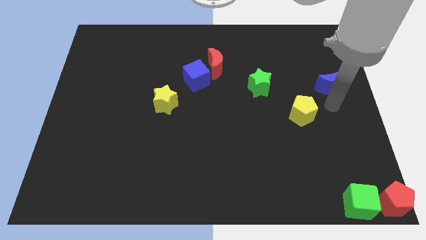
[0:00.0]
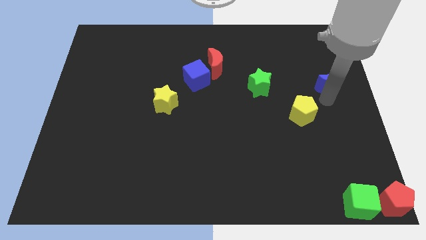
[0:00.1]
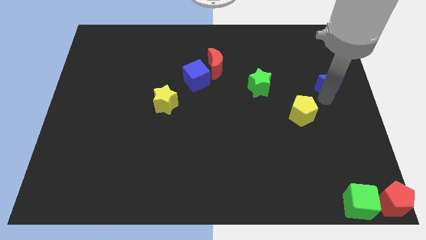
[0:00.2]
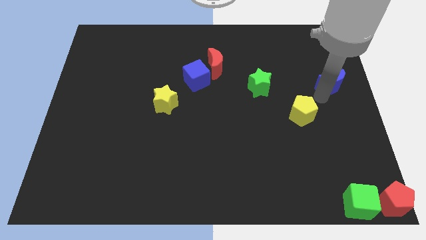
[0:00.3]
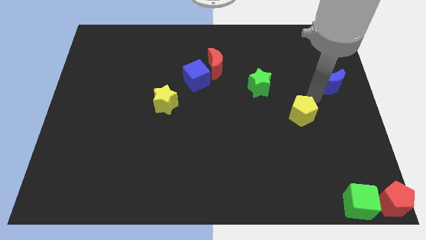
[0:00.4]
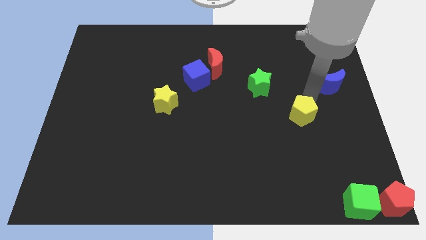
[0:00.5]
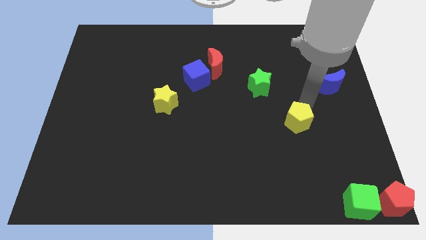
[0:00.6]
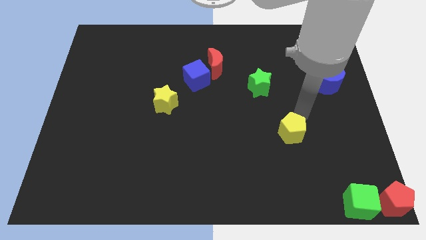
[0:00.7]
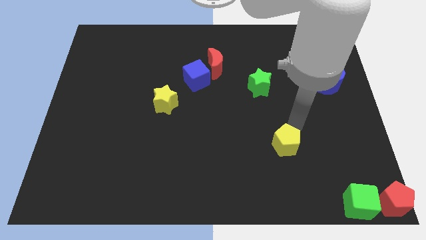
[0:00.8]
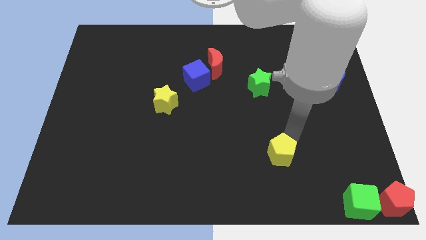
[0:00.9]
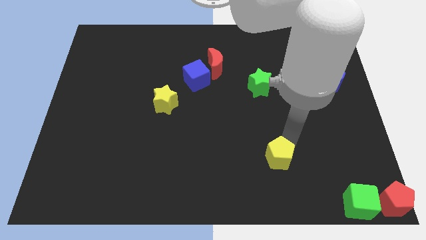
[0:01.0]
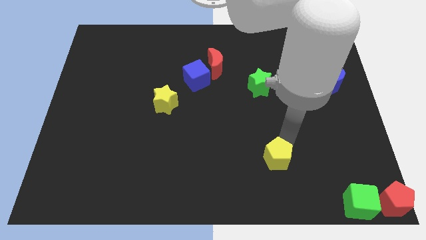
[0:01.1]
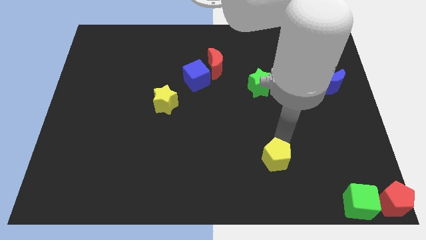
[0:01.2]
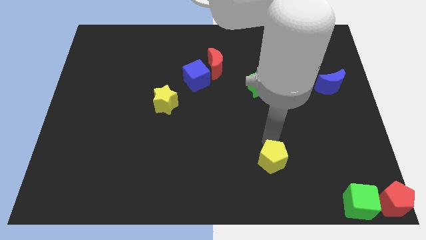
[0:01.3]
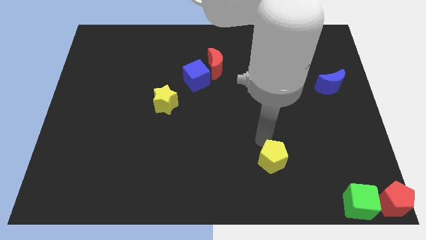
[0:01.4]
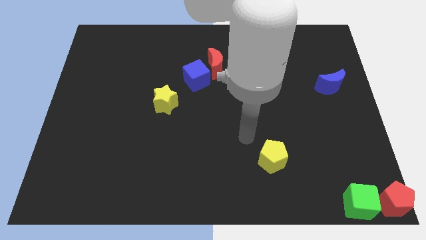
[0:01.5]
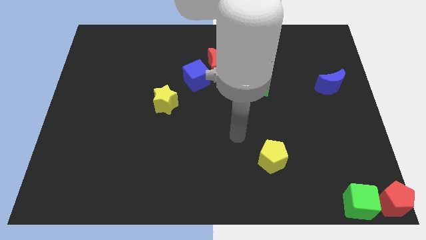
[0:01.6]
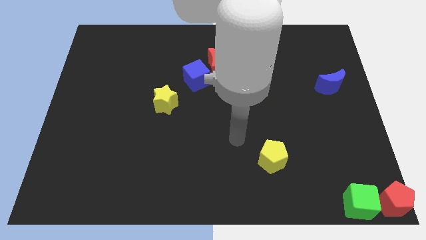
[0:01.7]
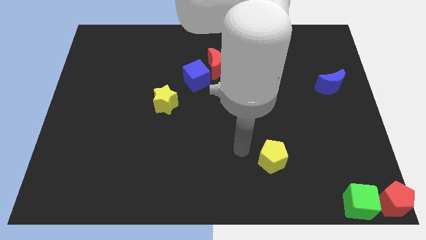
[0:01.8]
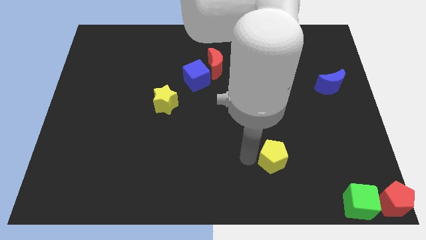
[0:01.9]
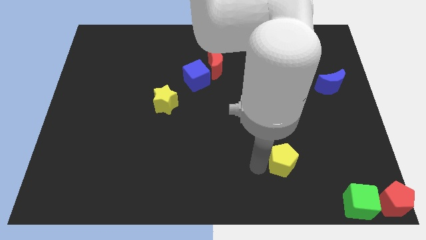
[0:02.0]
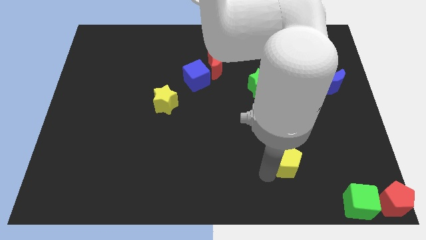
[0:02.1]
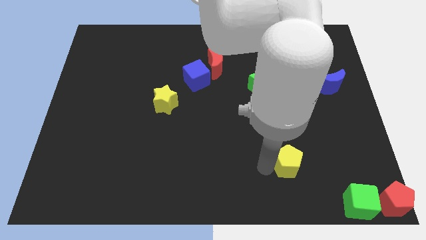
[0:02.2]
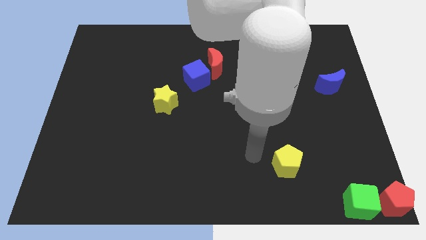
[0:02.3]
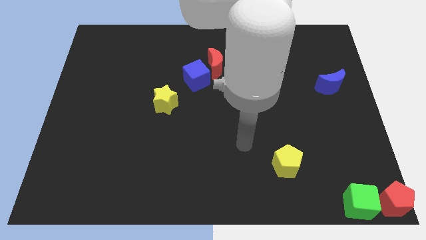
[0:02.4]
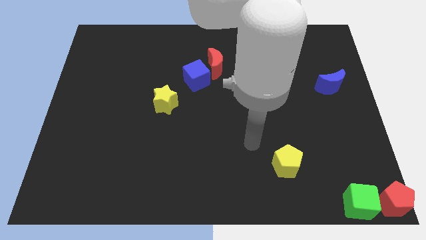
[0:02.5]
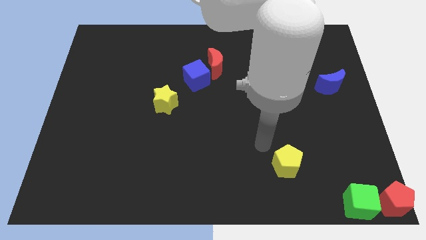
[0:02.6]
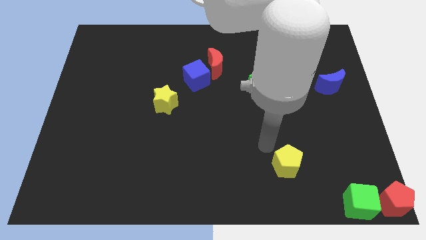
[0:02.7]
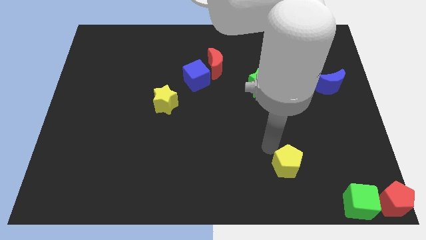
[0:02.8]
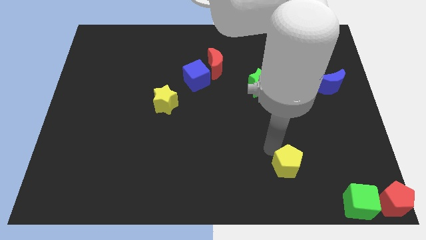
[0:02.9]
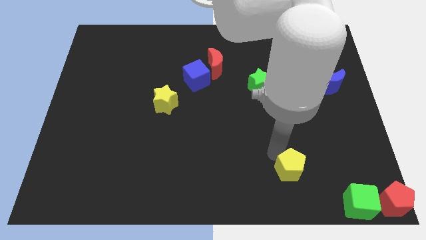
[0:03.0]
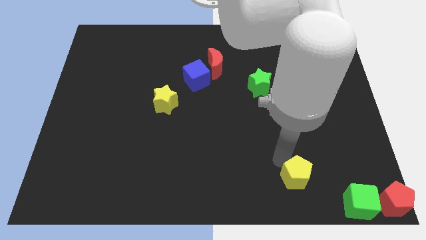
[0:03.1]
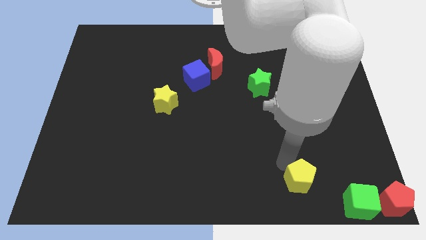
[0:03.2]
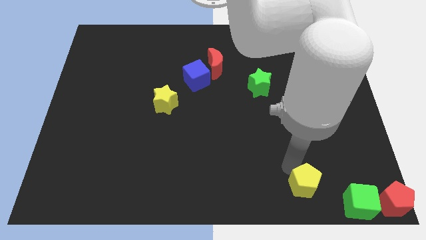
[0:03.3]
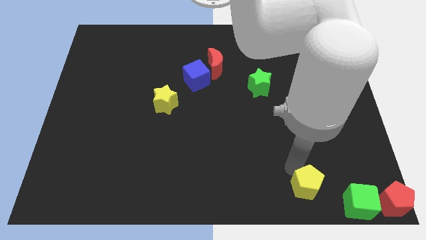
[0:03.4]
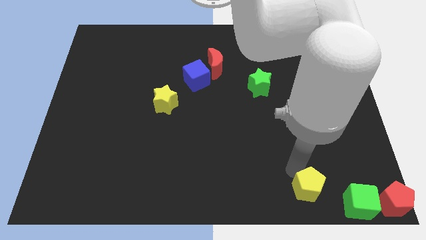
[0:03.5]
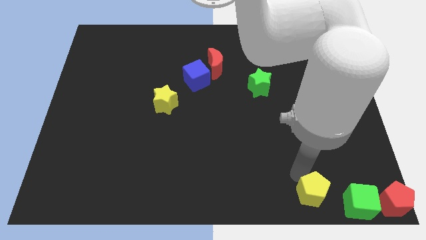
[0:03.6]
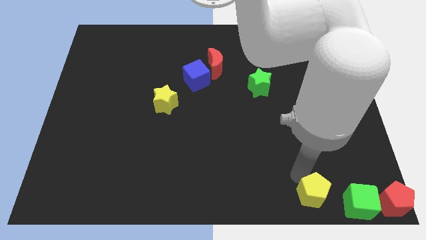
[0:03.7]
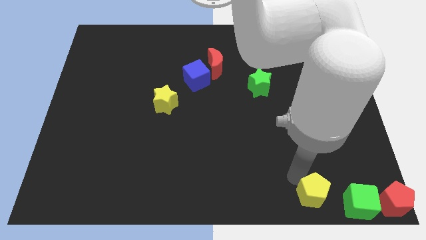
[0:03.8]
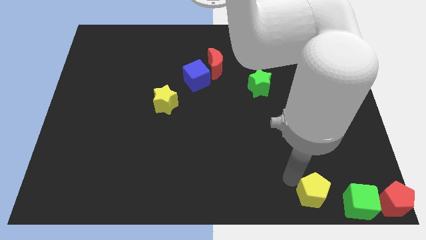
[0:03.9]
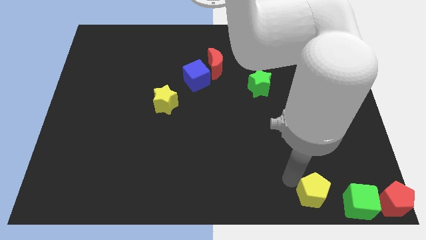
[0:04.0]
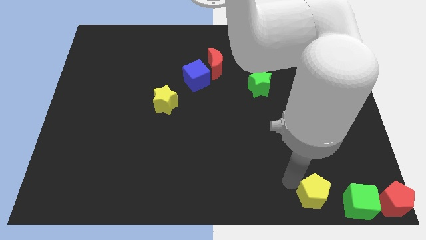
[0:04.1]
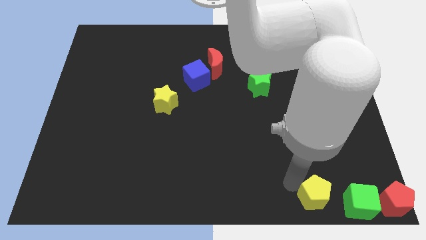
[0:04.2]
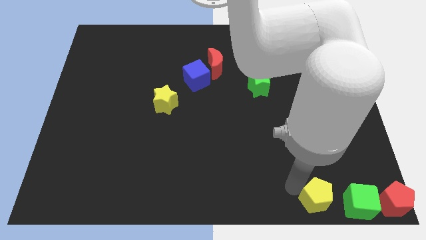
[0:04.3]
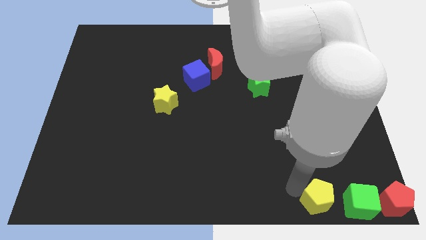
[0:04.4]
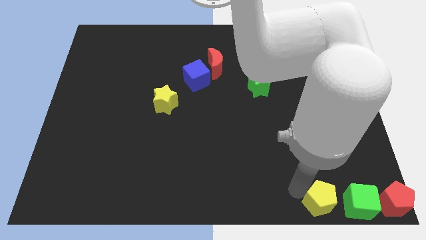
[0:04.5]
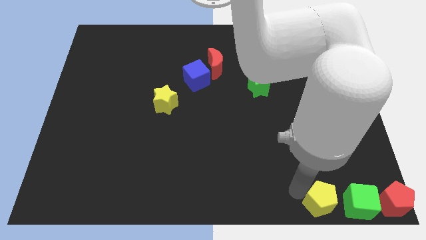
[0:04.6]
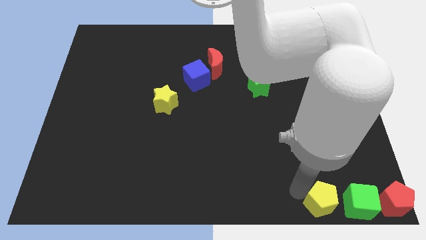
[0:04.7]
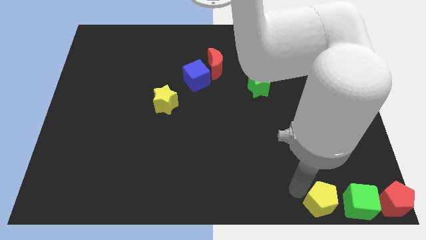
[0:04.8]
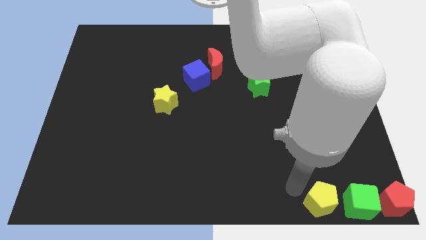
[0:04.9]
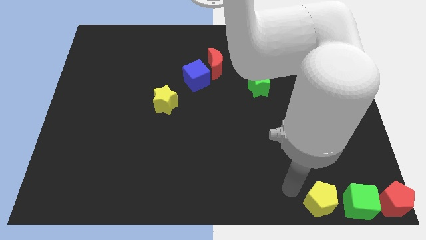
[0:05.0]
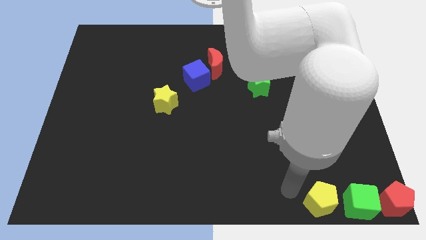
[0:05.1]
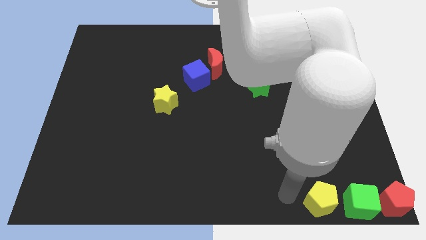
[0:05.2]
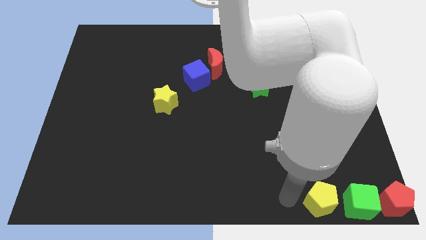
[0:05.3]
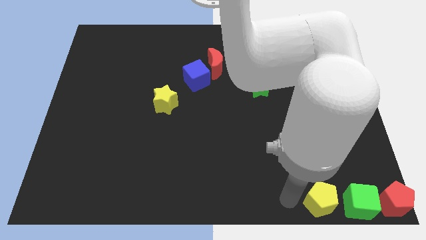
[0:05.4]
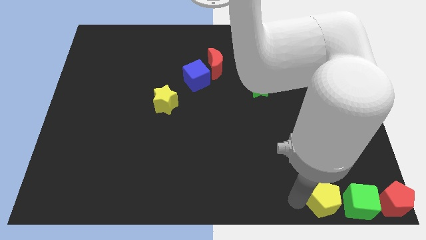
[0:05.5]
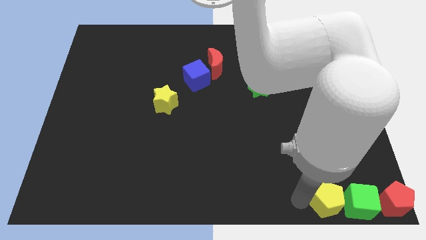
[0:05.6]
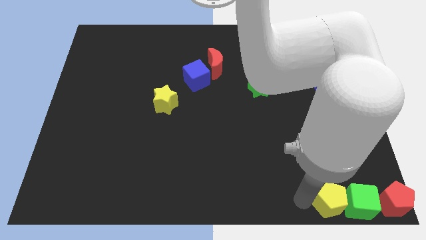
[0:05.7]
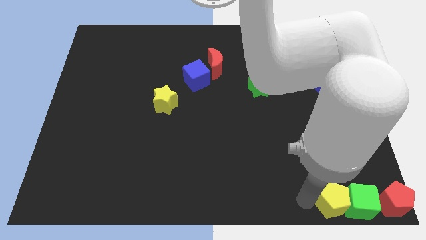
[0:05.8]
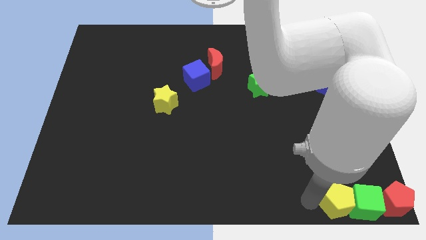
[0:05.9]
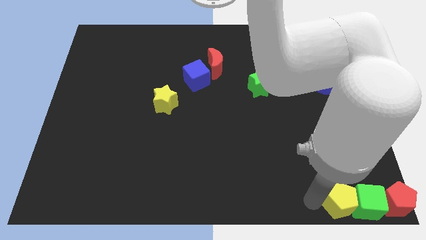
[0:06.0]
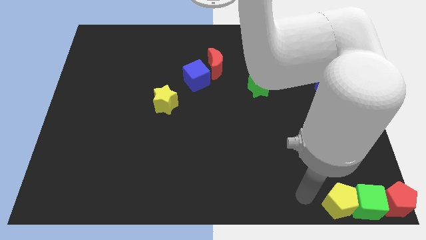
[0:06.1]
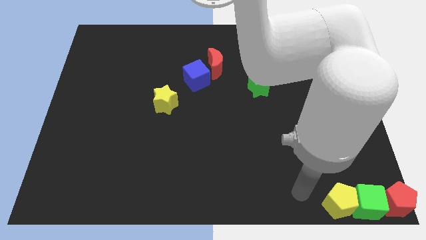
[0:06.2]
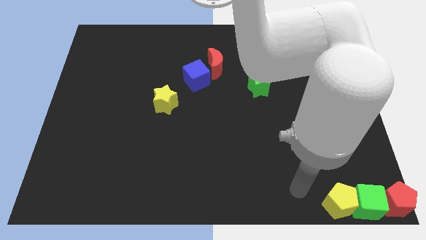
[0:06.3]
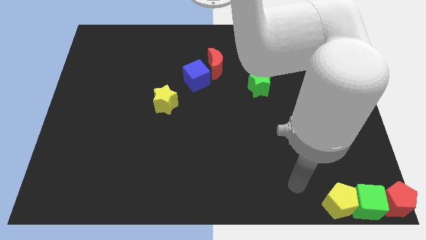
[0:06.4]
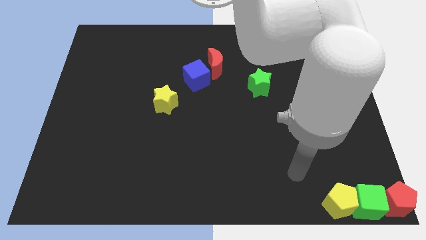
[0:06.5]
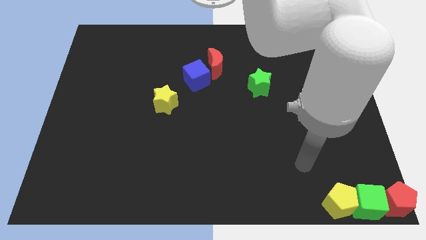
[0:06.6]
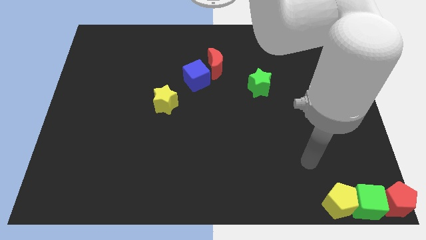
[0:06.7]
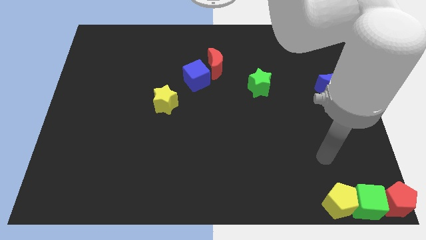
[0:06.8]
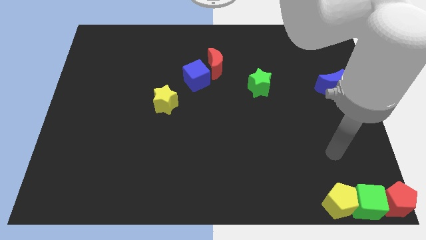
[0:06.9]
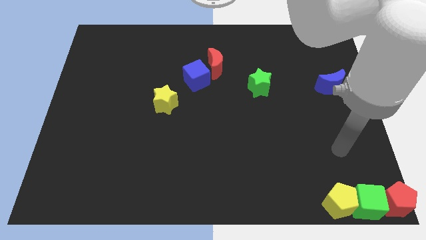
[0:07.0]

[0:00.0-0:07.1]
push yellow pentagon into green cube and red pentagon

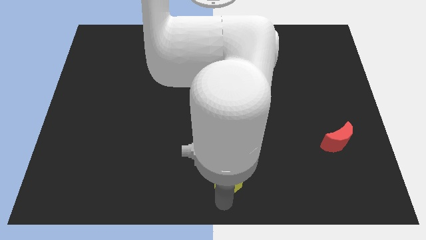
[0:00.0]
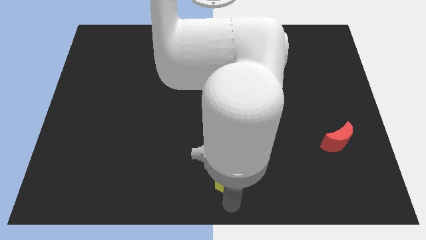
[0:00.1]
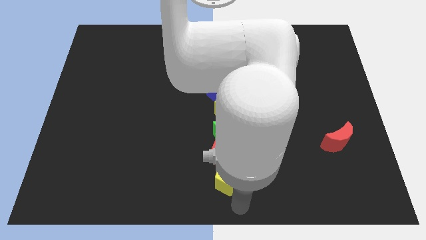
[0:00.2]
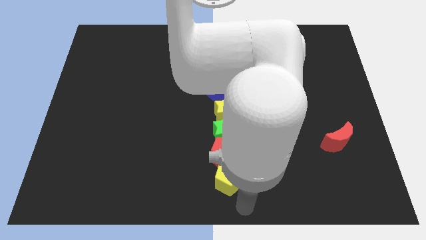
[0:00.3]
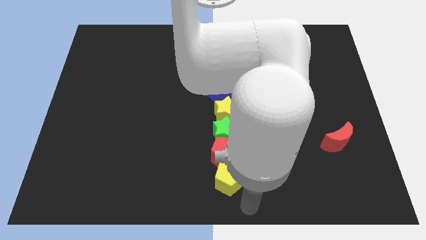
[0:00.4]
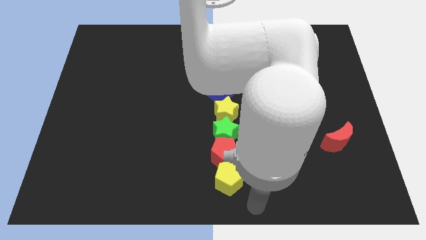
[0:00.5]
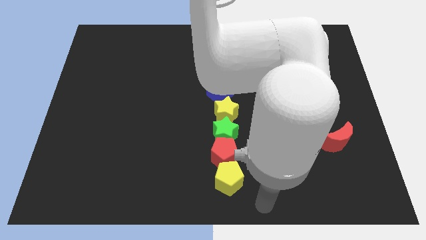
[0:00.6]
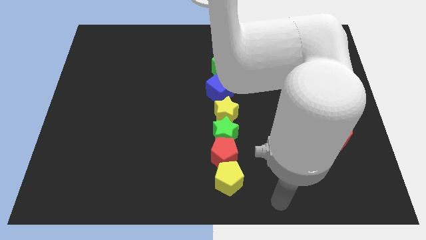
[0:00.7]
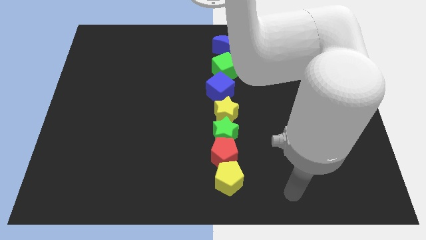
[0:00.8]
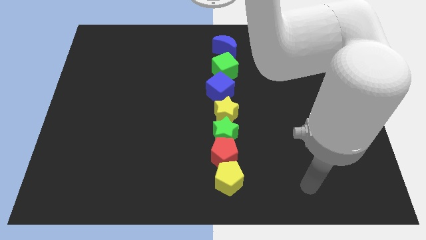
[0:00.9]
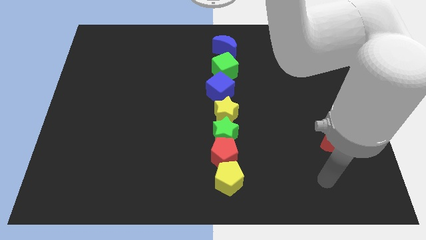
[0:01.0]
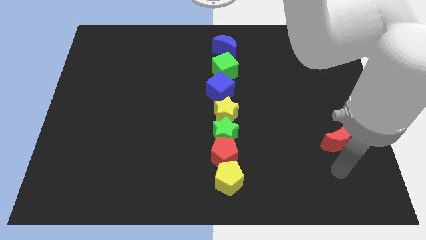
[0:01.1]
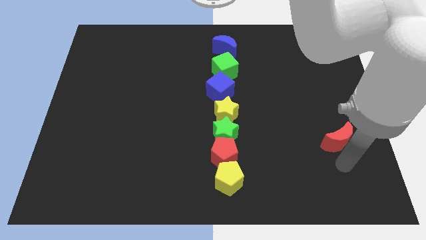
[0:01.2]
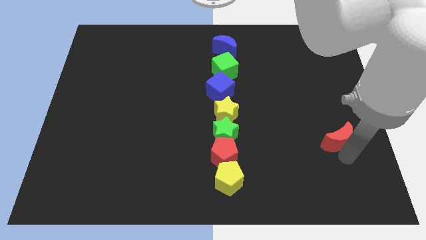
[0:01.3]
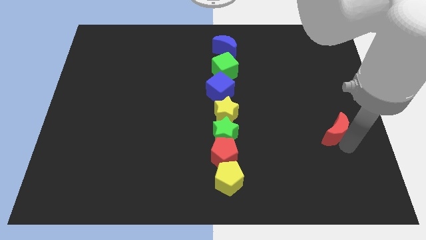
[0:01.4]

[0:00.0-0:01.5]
touch the bottom right side of the red crescent

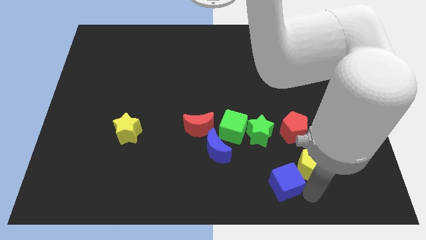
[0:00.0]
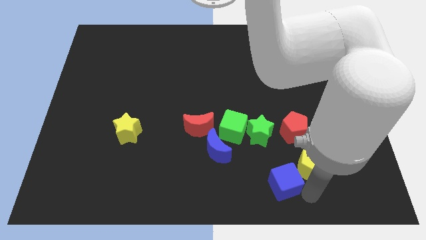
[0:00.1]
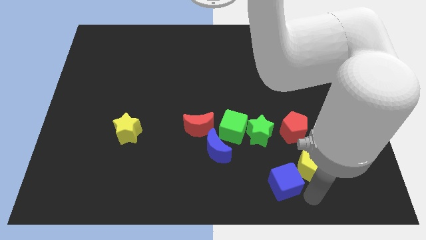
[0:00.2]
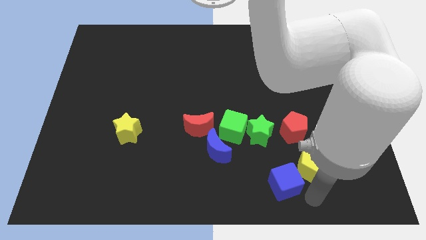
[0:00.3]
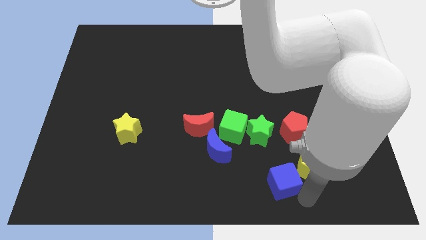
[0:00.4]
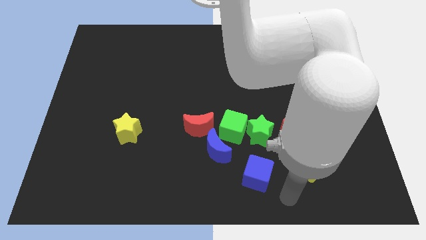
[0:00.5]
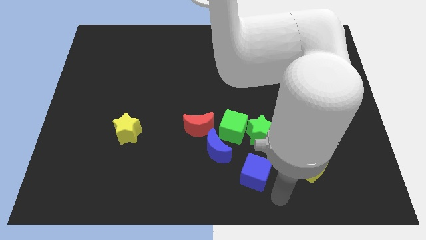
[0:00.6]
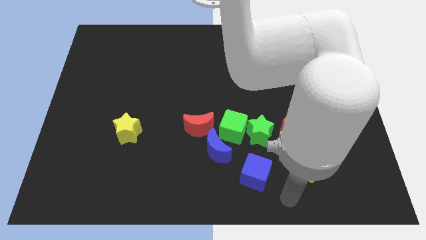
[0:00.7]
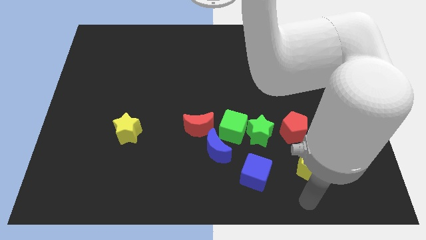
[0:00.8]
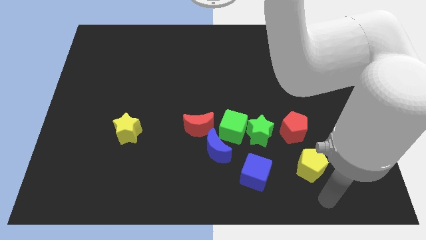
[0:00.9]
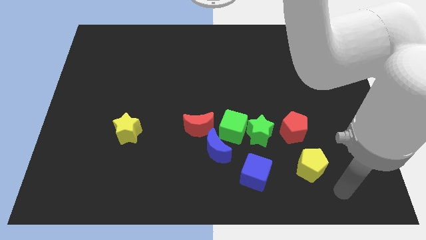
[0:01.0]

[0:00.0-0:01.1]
place the blue cube at the bottom of green star
